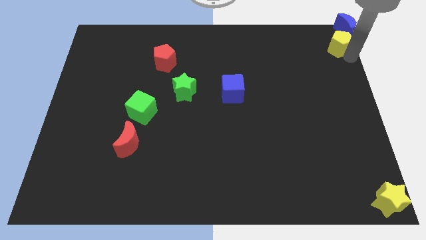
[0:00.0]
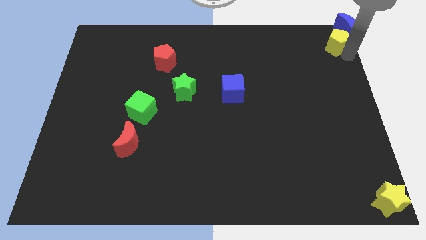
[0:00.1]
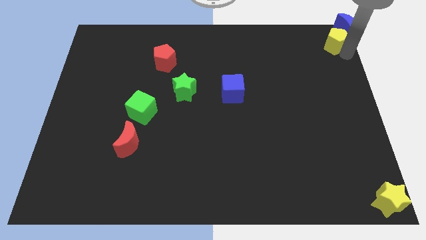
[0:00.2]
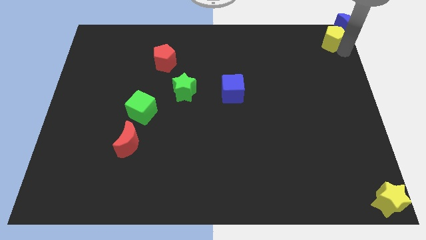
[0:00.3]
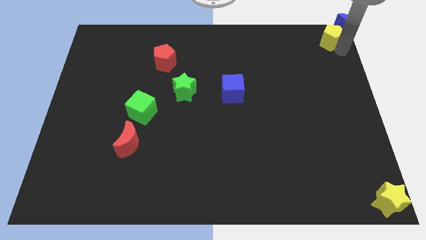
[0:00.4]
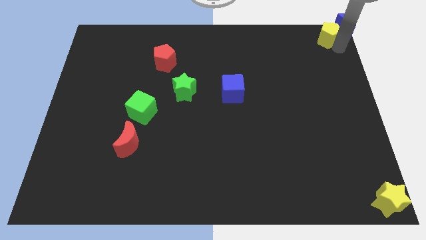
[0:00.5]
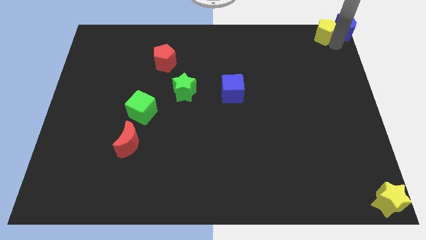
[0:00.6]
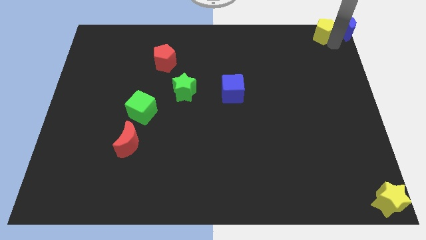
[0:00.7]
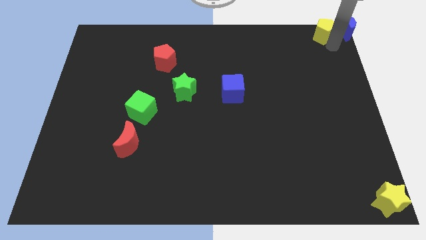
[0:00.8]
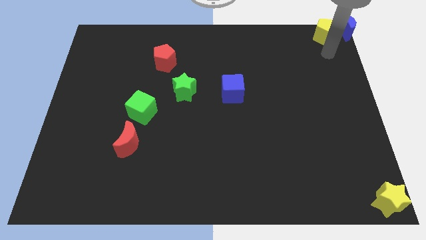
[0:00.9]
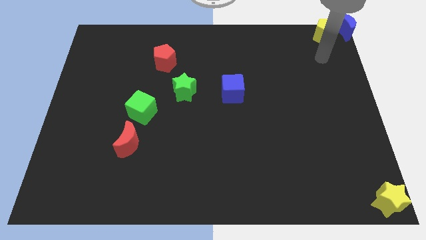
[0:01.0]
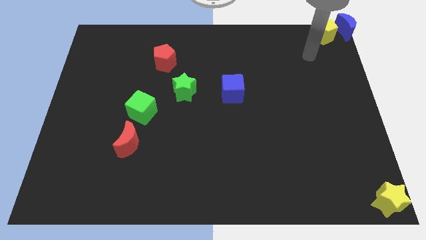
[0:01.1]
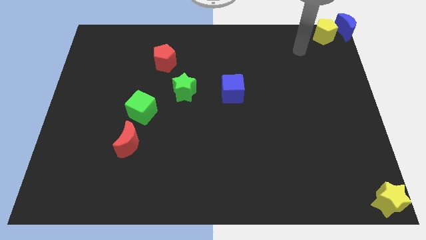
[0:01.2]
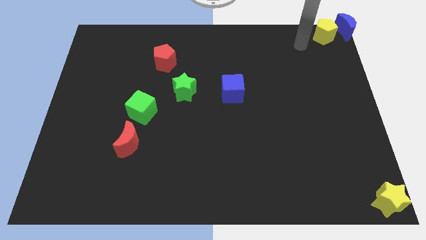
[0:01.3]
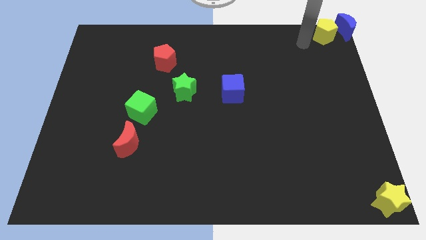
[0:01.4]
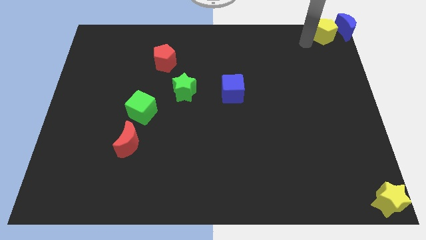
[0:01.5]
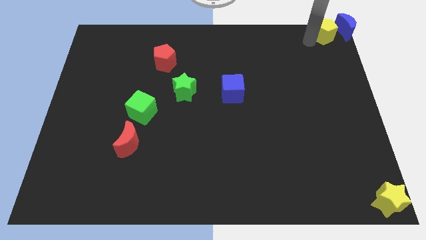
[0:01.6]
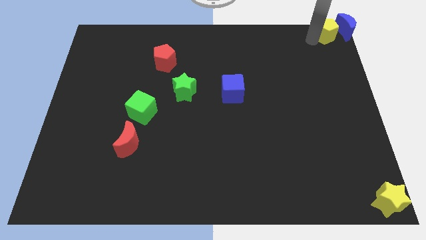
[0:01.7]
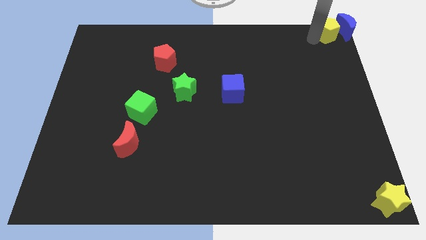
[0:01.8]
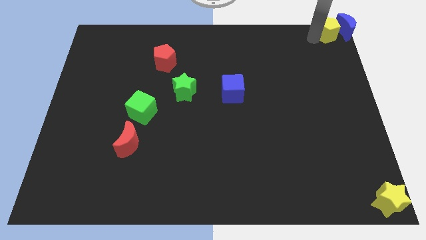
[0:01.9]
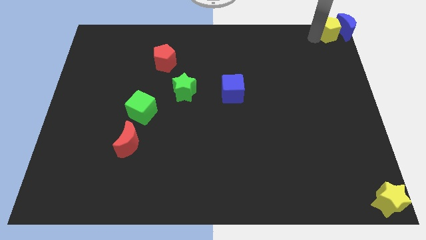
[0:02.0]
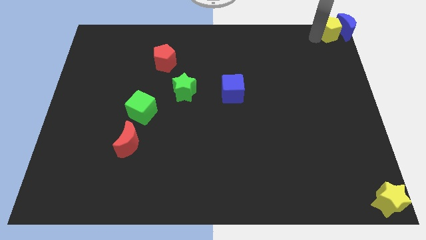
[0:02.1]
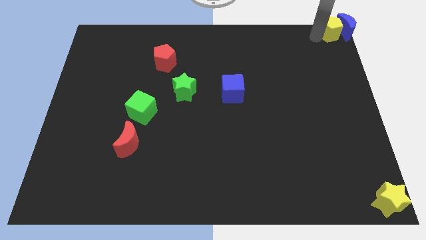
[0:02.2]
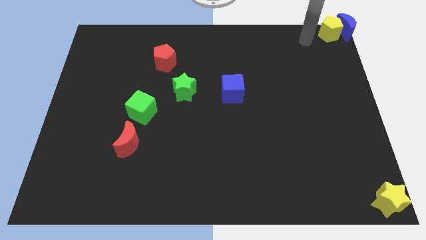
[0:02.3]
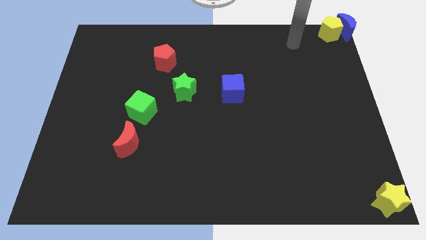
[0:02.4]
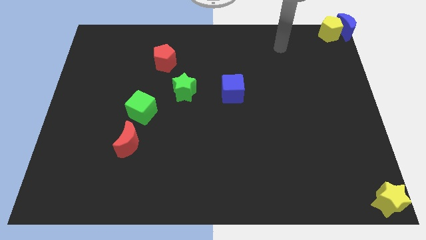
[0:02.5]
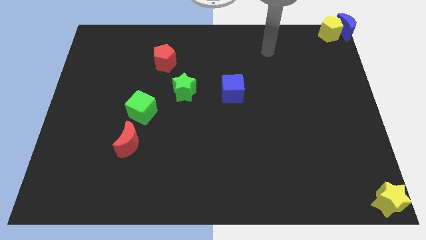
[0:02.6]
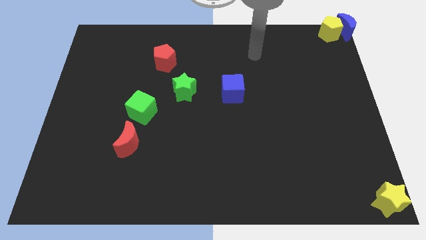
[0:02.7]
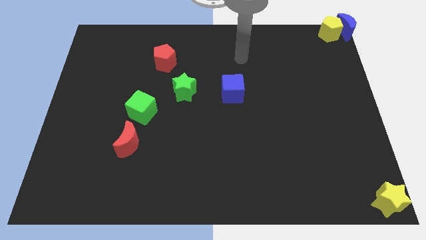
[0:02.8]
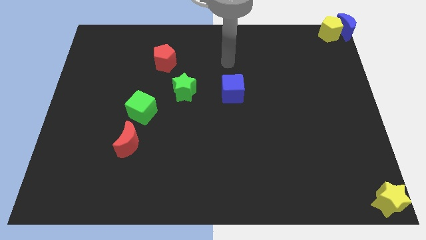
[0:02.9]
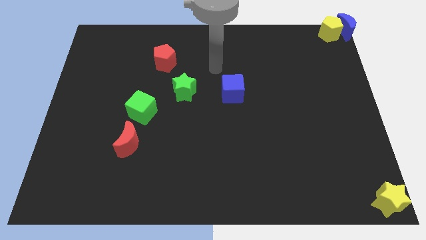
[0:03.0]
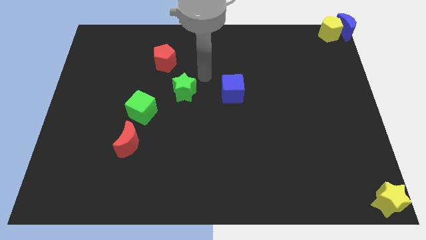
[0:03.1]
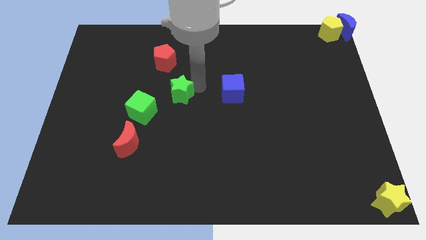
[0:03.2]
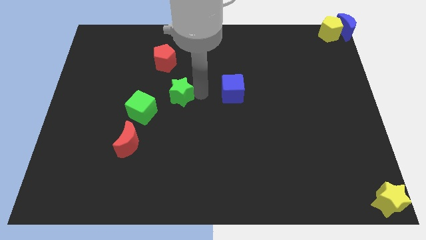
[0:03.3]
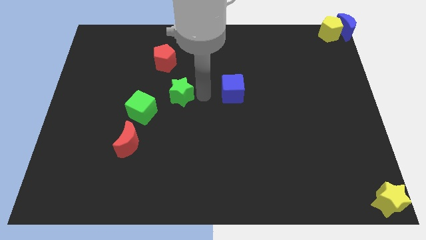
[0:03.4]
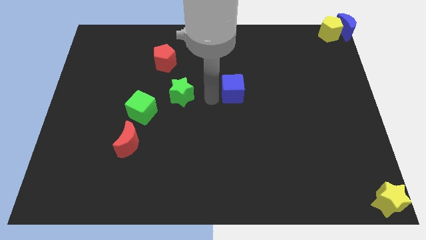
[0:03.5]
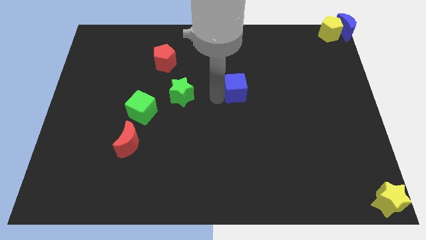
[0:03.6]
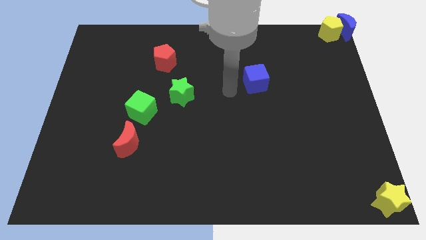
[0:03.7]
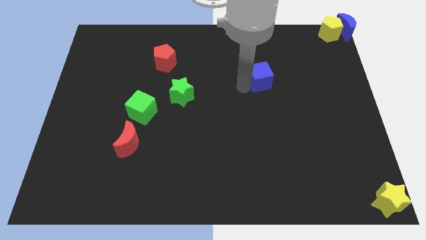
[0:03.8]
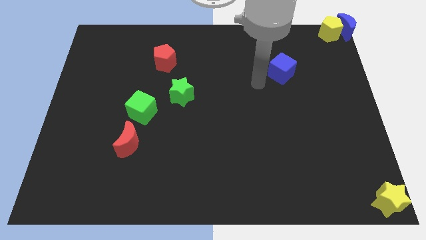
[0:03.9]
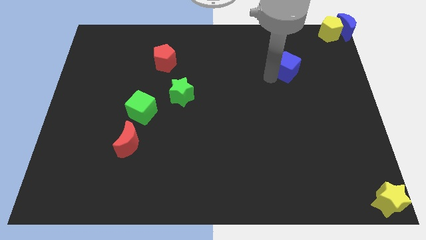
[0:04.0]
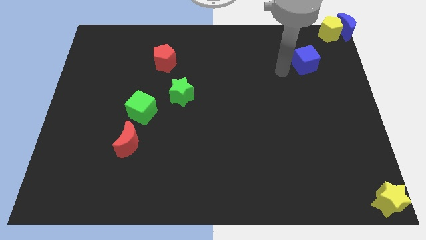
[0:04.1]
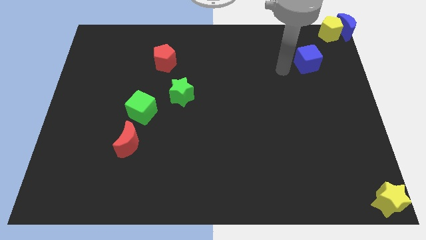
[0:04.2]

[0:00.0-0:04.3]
put the blue cube diagonally to the bottom left of the yellow pentagon

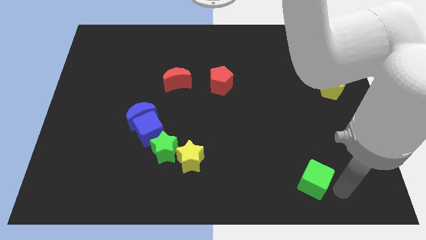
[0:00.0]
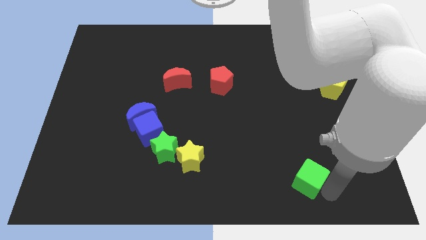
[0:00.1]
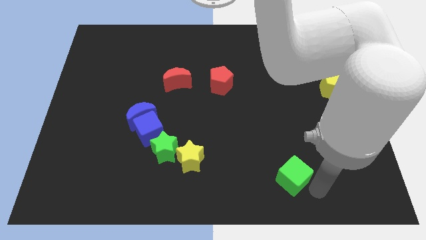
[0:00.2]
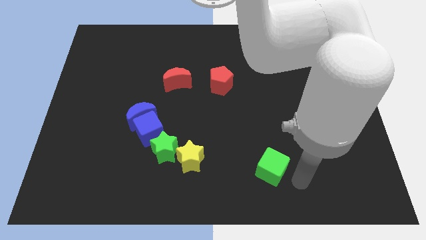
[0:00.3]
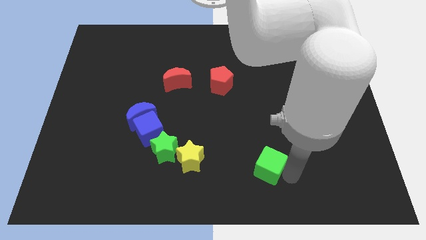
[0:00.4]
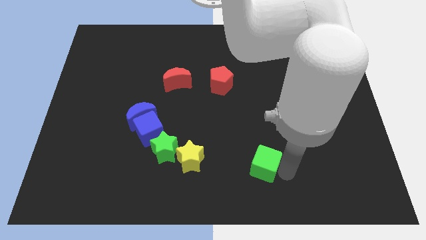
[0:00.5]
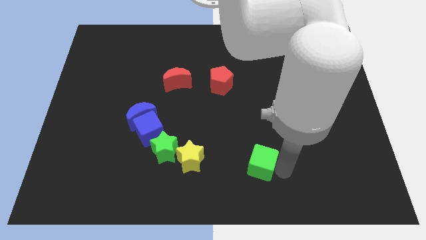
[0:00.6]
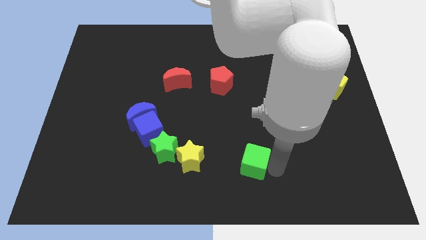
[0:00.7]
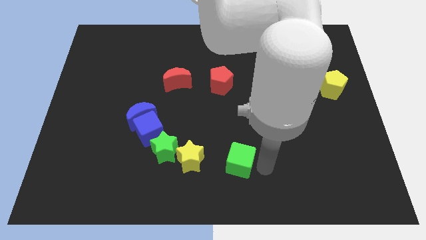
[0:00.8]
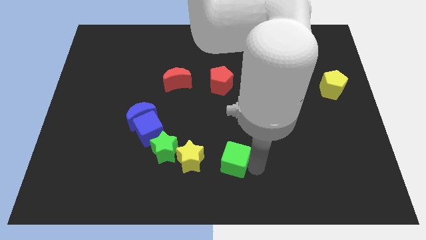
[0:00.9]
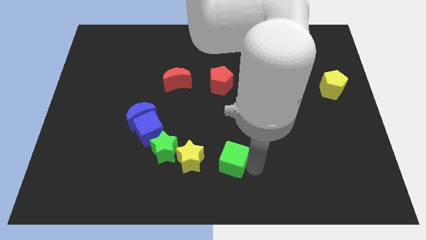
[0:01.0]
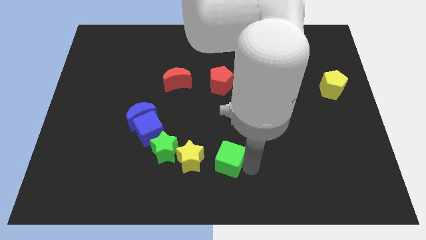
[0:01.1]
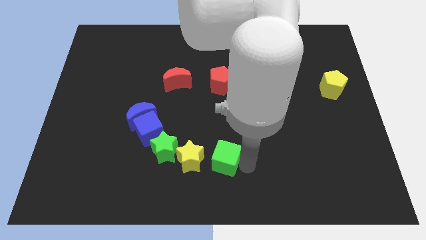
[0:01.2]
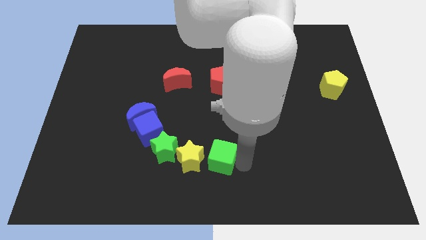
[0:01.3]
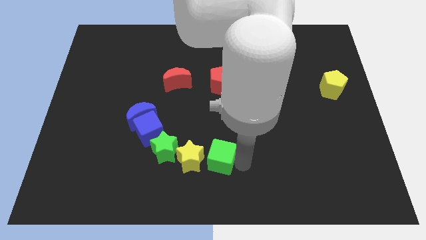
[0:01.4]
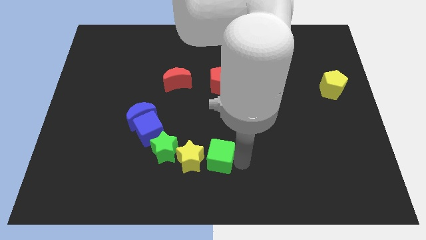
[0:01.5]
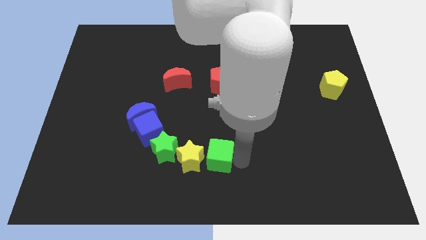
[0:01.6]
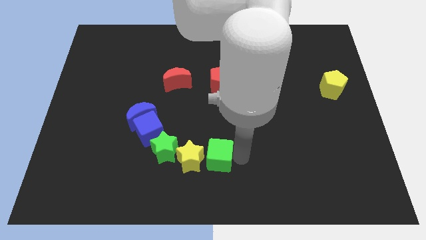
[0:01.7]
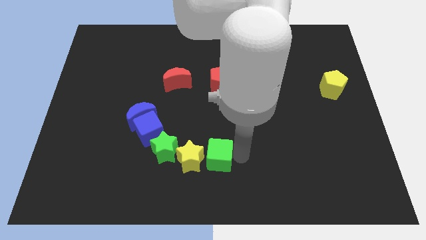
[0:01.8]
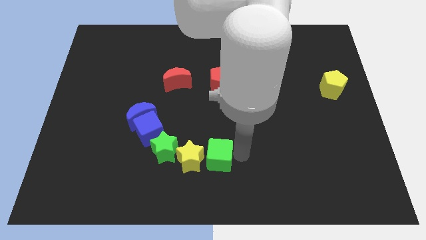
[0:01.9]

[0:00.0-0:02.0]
move the green cube towards the right side of the yellow star

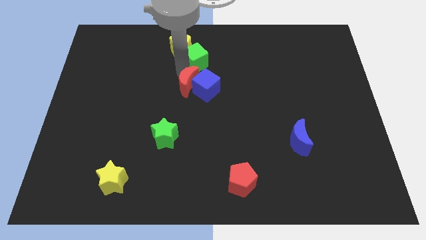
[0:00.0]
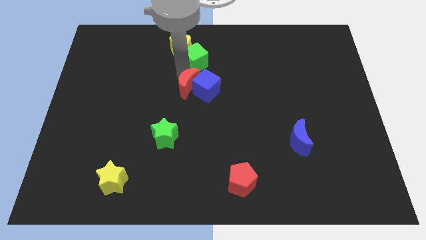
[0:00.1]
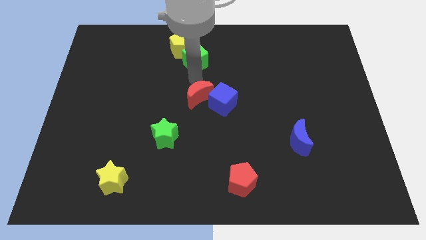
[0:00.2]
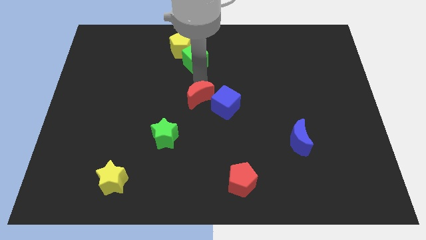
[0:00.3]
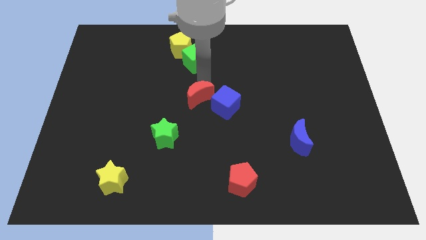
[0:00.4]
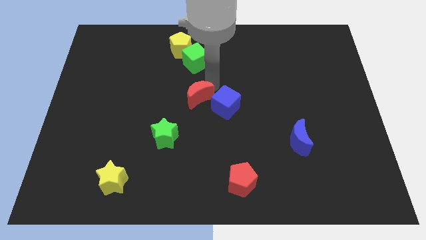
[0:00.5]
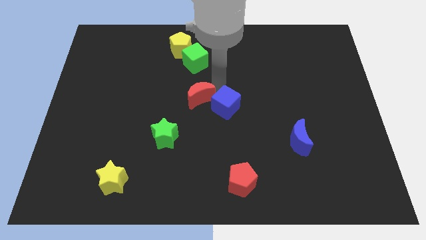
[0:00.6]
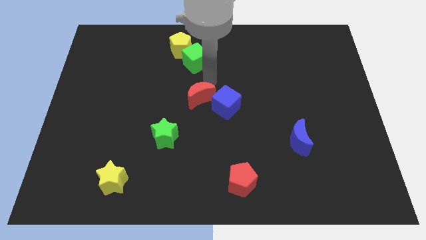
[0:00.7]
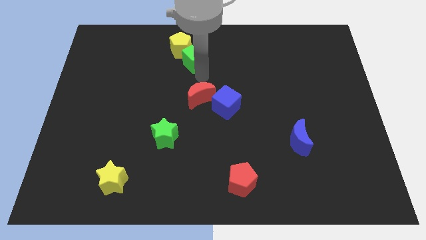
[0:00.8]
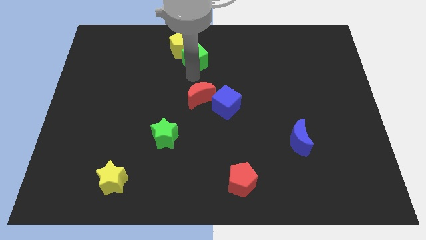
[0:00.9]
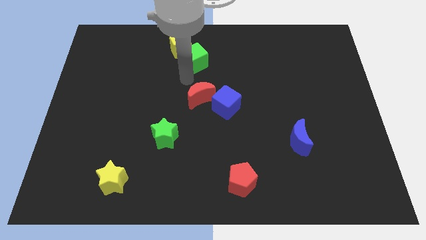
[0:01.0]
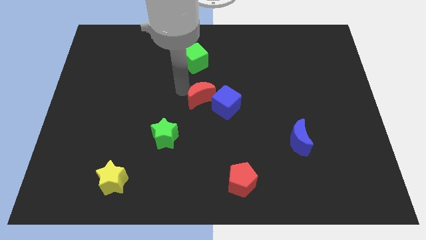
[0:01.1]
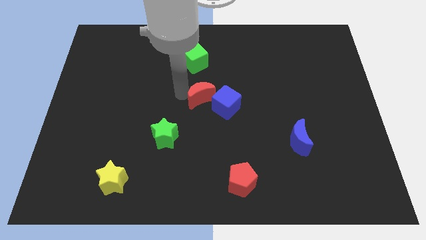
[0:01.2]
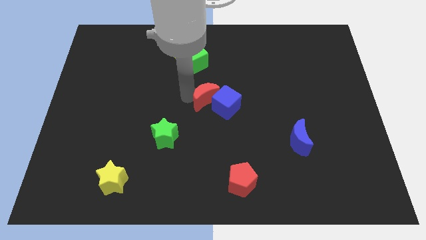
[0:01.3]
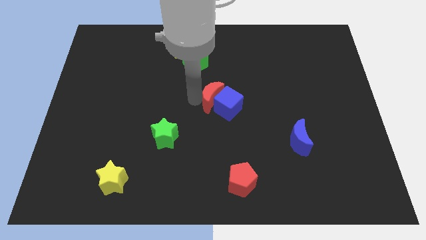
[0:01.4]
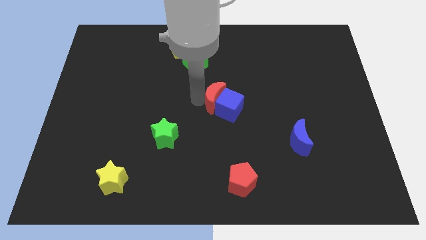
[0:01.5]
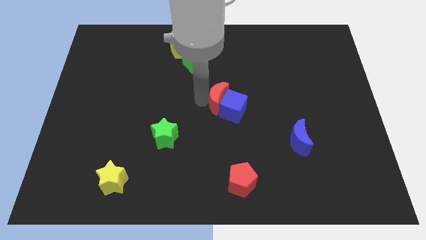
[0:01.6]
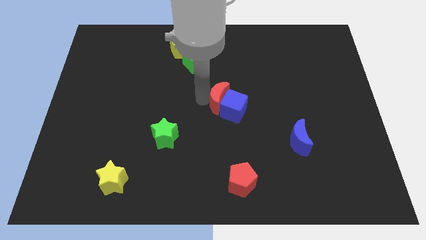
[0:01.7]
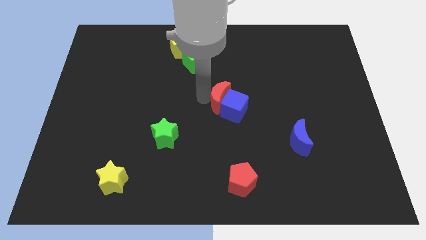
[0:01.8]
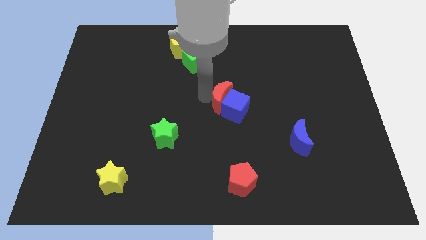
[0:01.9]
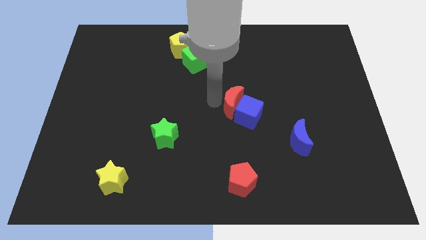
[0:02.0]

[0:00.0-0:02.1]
push the red crescent and blue cube towards the blue crescent

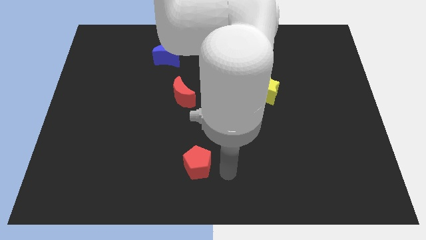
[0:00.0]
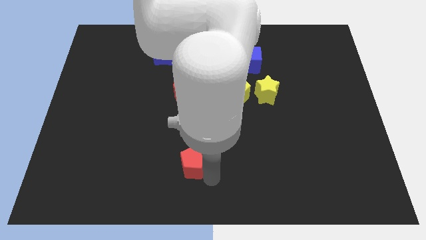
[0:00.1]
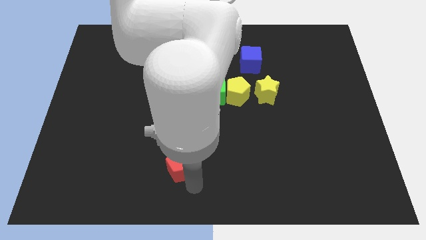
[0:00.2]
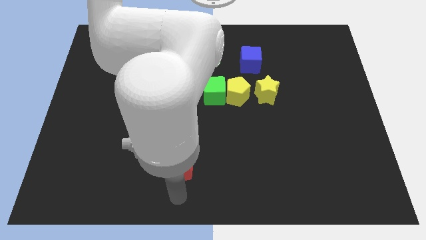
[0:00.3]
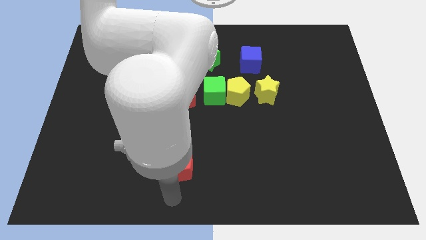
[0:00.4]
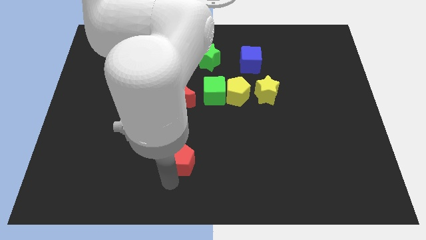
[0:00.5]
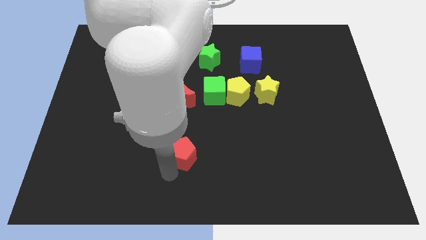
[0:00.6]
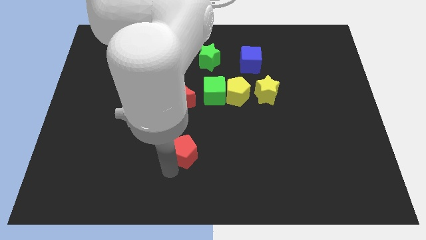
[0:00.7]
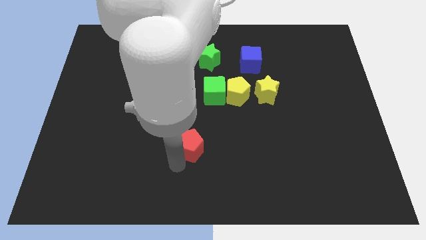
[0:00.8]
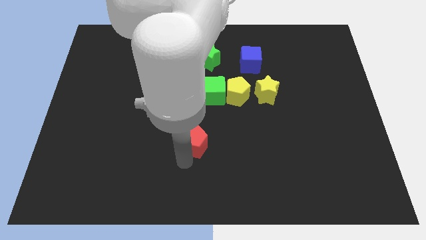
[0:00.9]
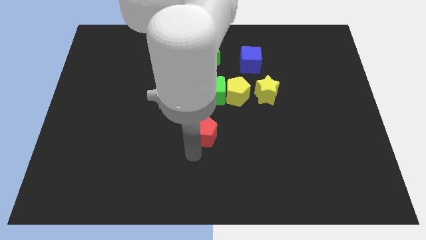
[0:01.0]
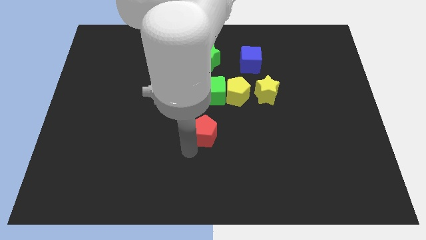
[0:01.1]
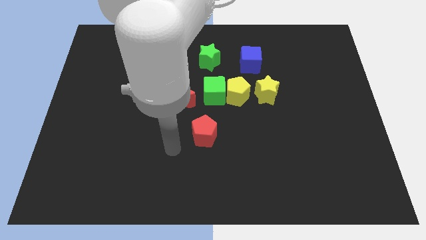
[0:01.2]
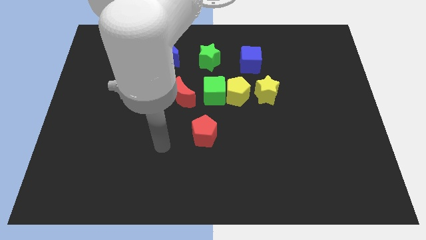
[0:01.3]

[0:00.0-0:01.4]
move the red pentagon towards up
